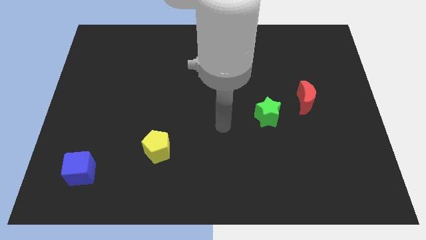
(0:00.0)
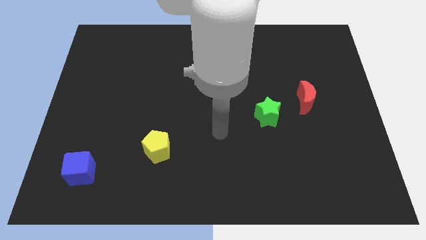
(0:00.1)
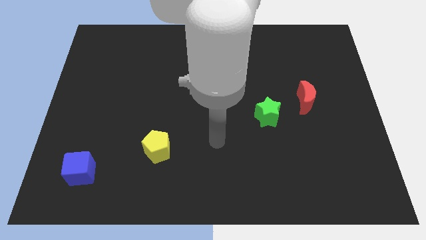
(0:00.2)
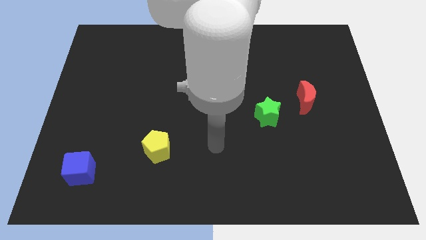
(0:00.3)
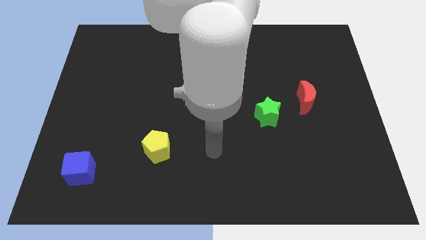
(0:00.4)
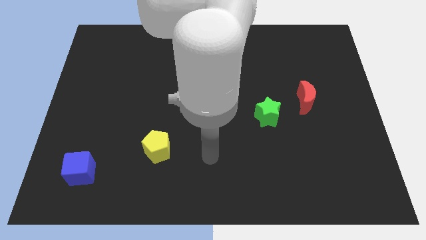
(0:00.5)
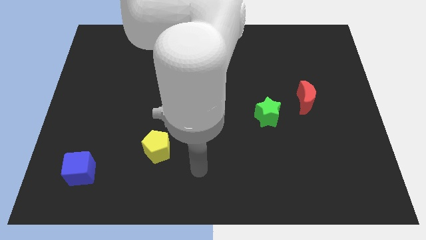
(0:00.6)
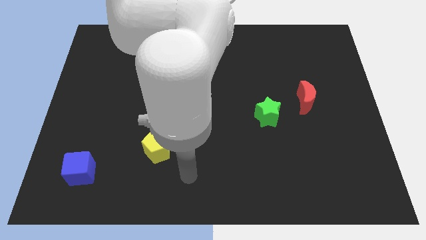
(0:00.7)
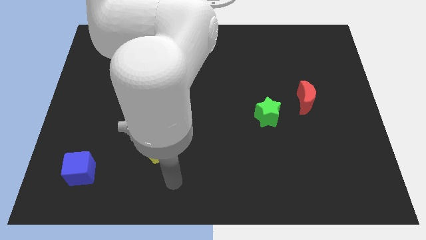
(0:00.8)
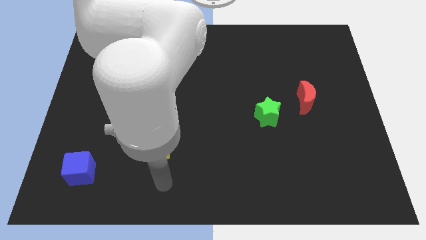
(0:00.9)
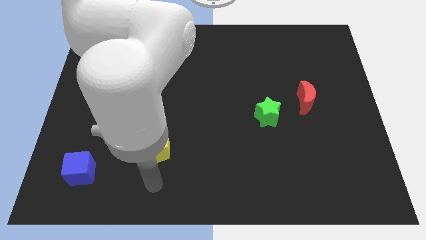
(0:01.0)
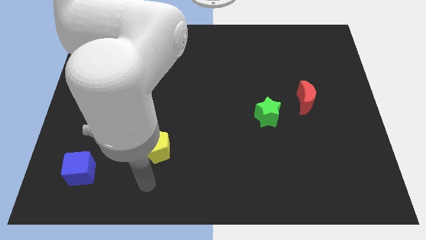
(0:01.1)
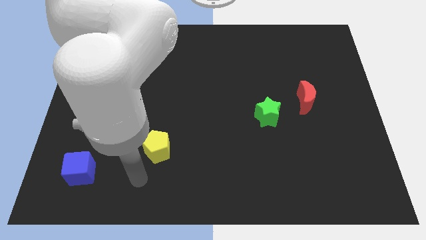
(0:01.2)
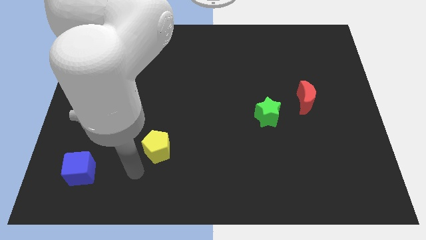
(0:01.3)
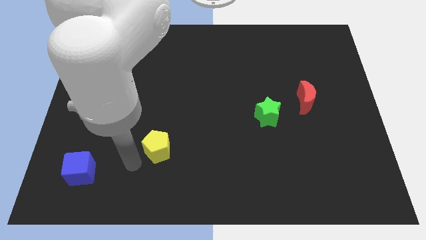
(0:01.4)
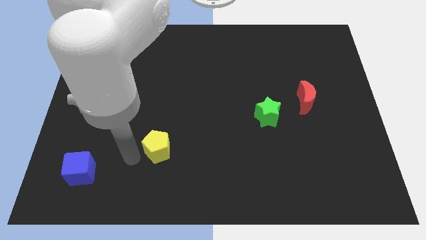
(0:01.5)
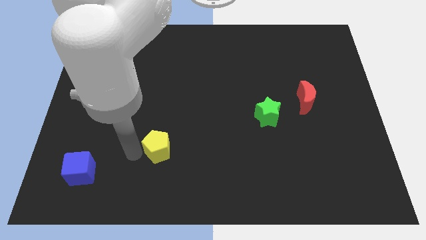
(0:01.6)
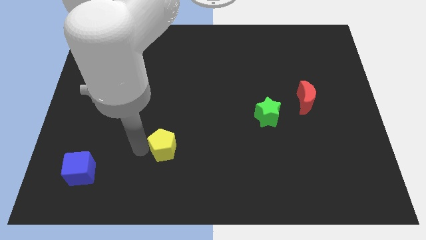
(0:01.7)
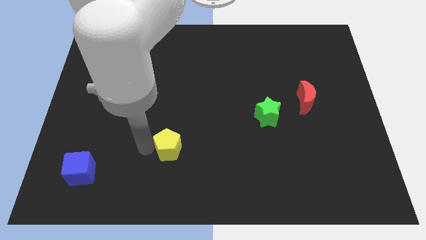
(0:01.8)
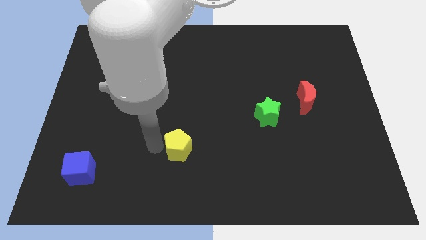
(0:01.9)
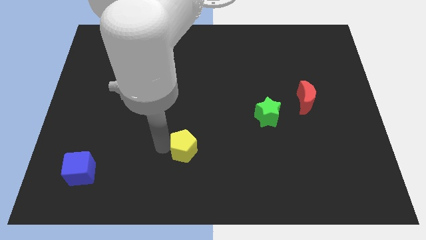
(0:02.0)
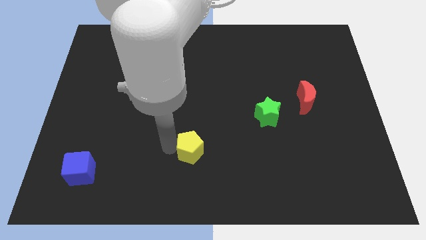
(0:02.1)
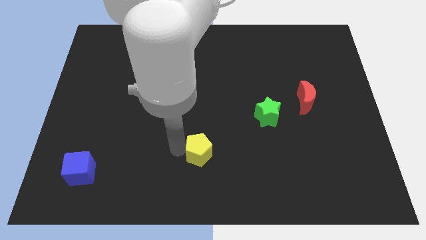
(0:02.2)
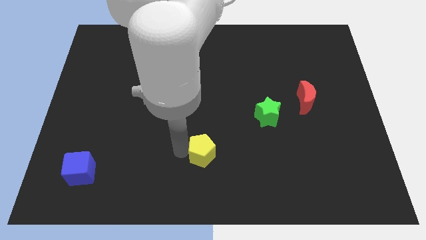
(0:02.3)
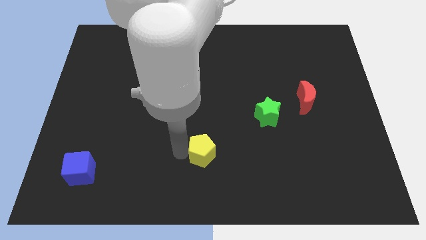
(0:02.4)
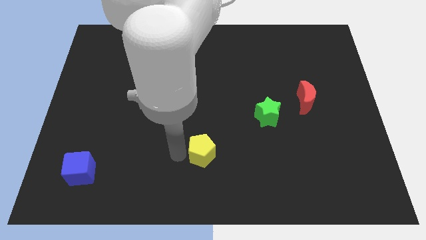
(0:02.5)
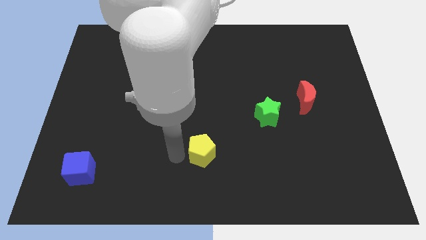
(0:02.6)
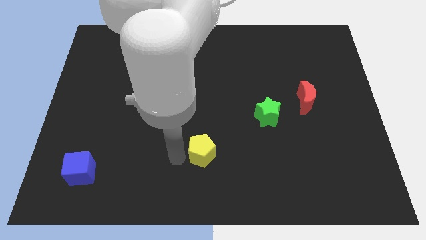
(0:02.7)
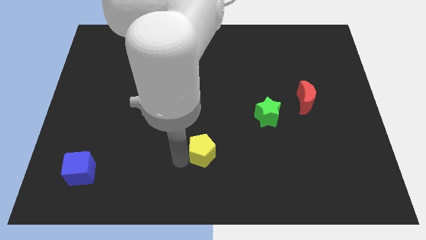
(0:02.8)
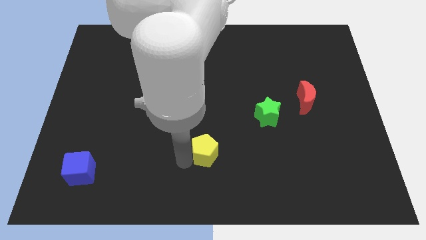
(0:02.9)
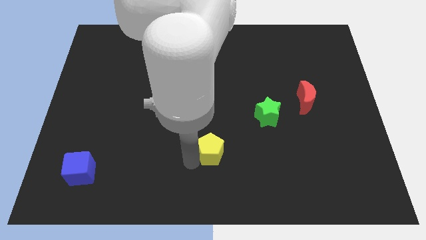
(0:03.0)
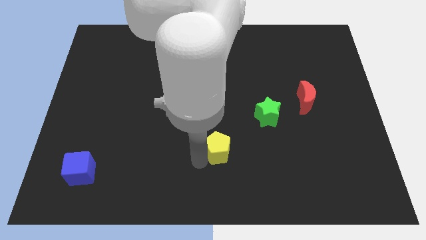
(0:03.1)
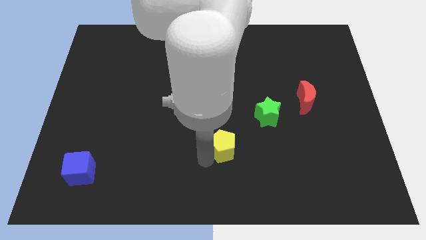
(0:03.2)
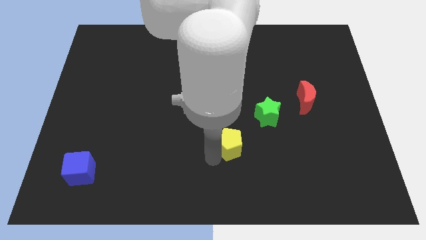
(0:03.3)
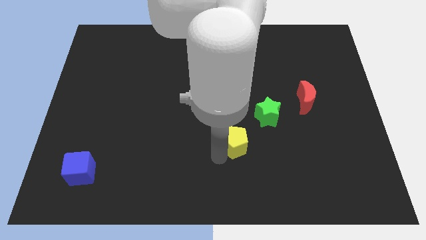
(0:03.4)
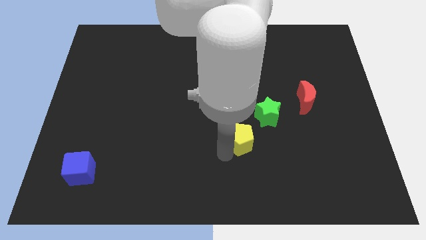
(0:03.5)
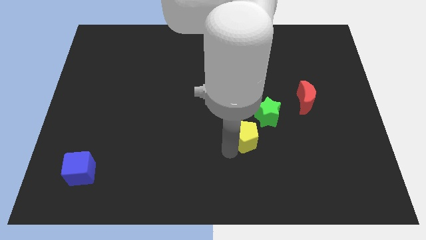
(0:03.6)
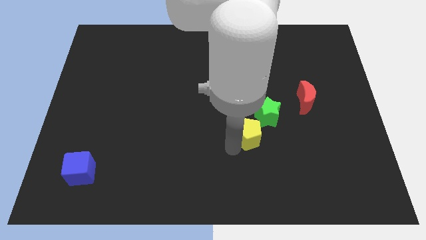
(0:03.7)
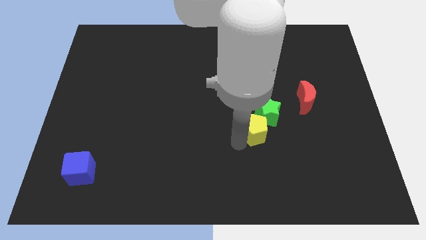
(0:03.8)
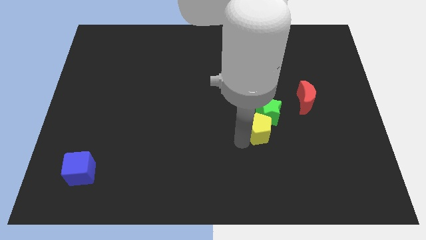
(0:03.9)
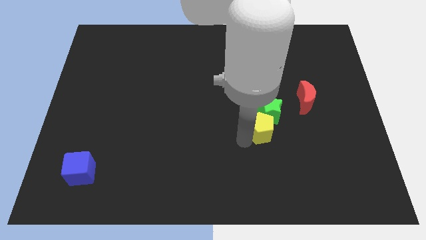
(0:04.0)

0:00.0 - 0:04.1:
slide the yellow block to the green block

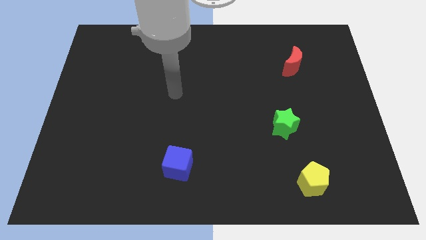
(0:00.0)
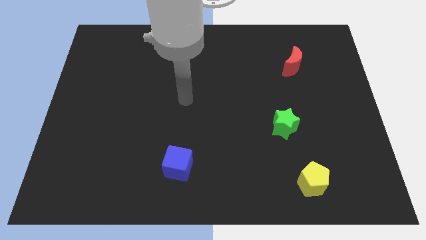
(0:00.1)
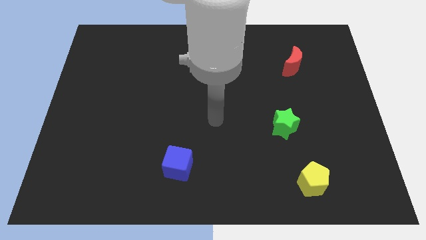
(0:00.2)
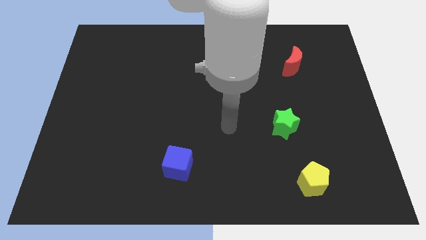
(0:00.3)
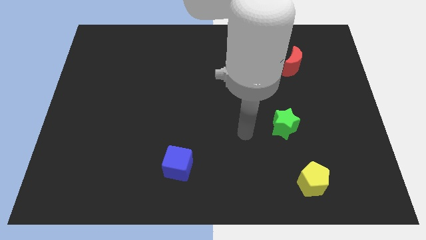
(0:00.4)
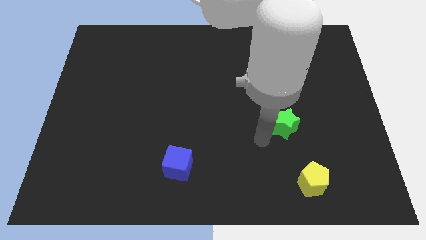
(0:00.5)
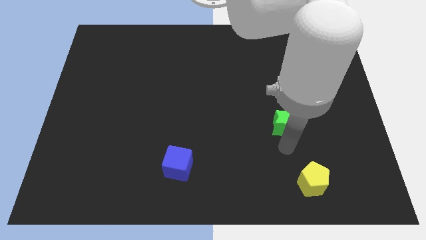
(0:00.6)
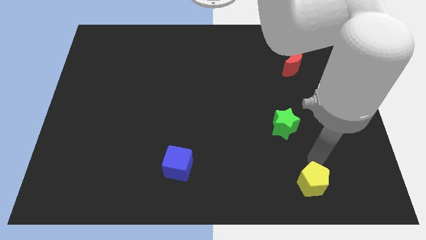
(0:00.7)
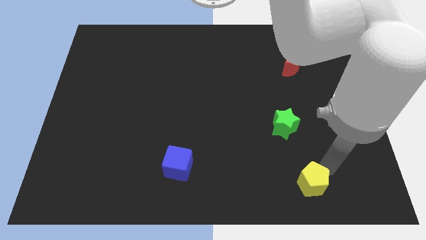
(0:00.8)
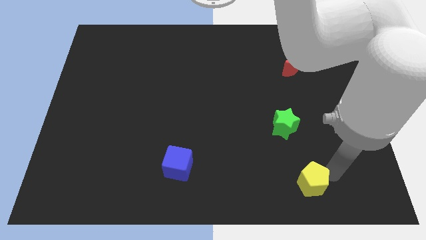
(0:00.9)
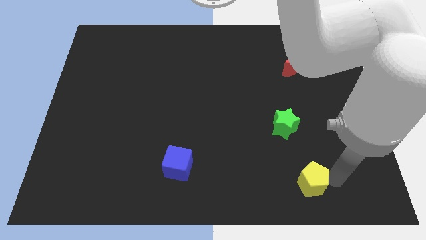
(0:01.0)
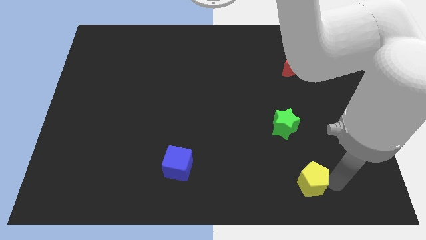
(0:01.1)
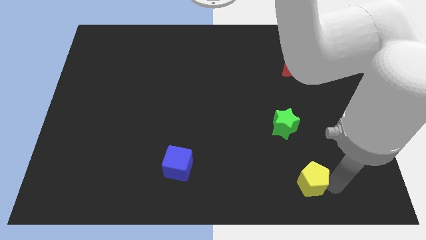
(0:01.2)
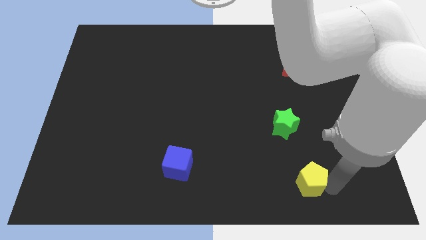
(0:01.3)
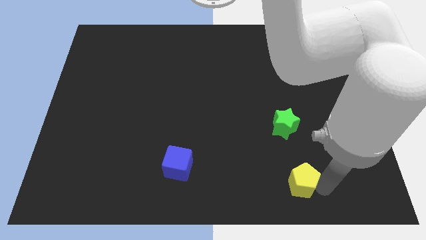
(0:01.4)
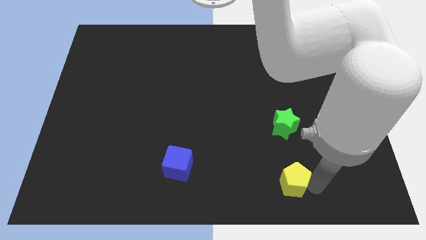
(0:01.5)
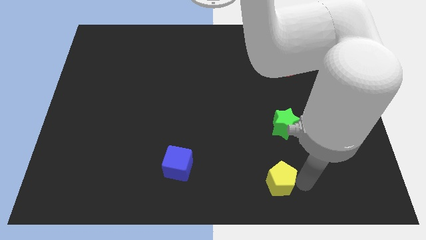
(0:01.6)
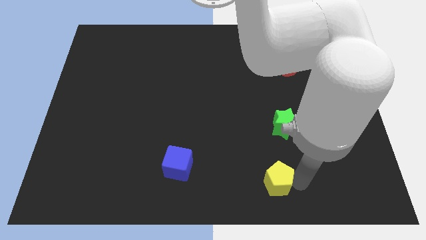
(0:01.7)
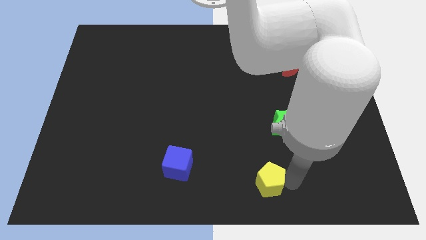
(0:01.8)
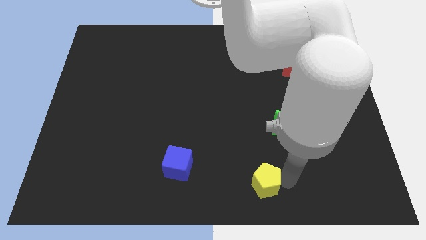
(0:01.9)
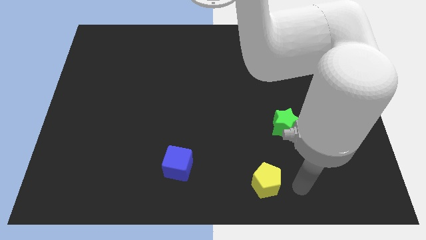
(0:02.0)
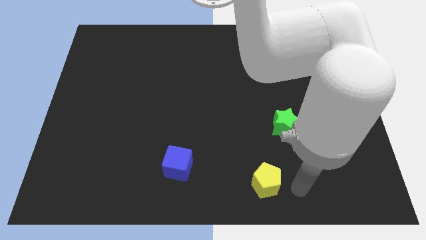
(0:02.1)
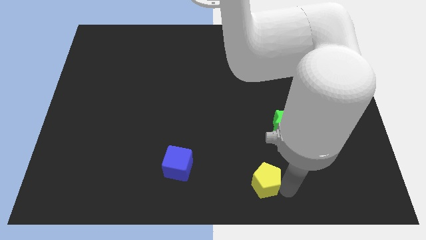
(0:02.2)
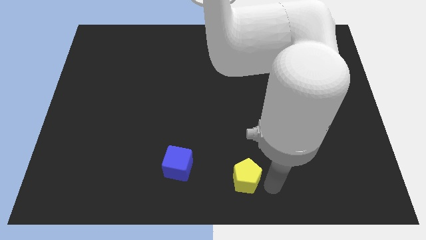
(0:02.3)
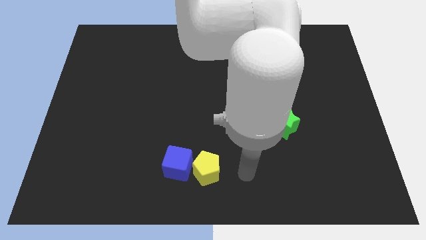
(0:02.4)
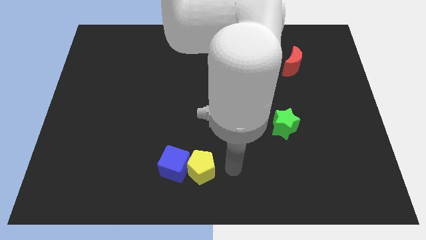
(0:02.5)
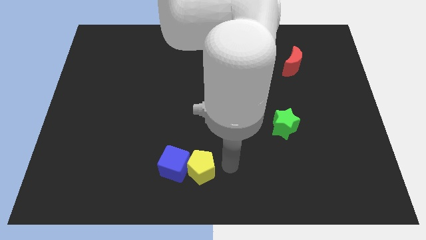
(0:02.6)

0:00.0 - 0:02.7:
move the yellow pentagon close to the cube

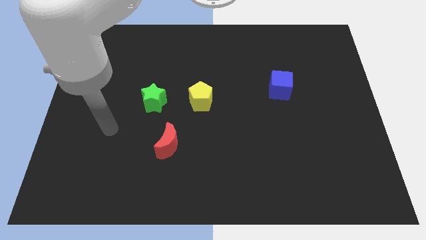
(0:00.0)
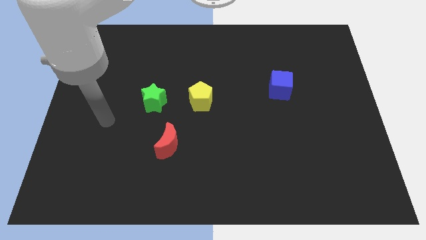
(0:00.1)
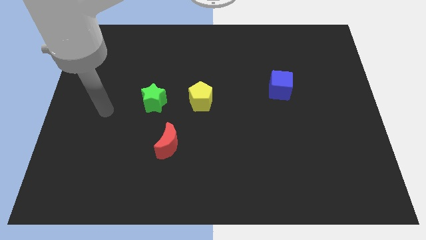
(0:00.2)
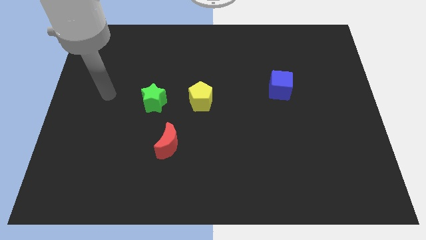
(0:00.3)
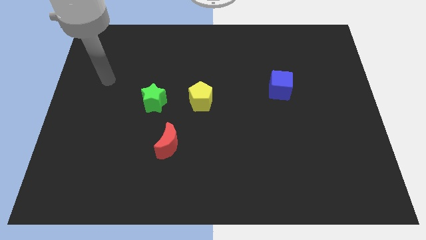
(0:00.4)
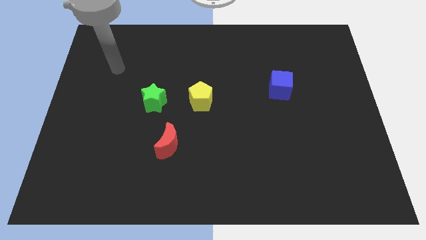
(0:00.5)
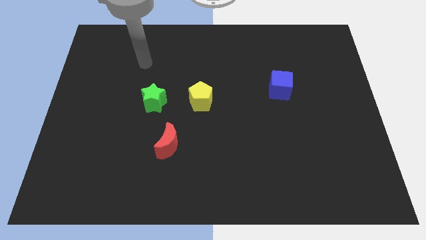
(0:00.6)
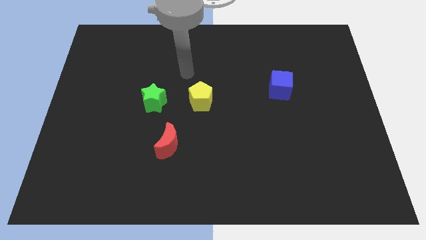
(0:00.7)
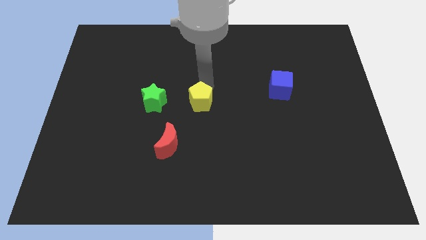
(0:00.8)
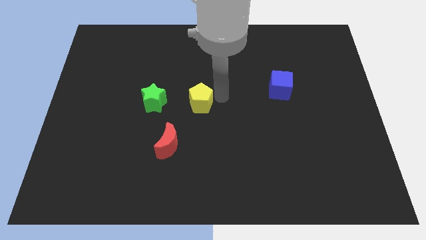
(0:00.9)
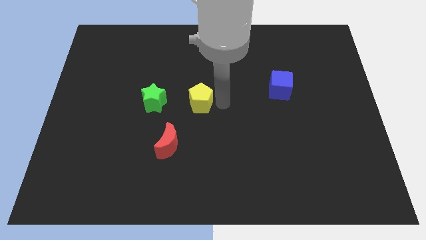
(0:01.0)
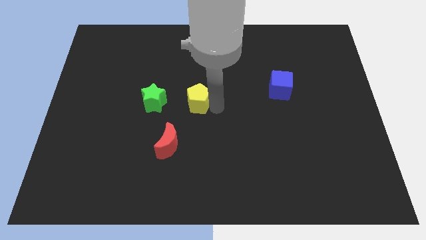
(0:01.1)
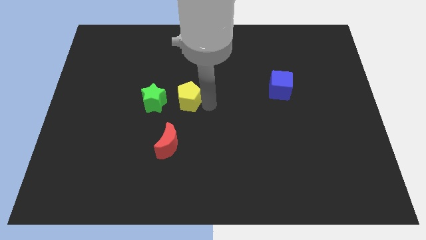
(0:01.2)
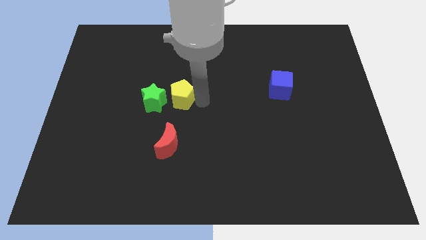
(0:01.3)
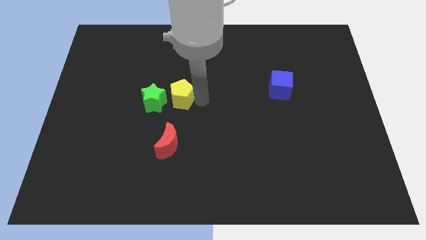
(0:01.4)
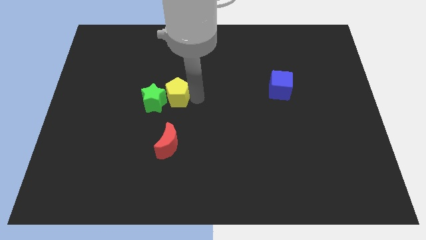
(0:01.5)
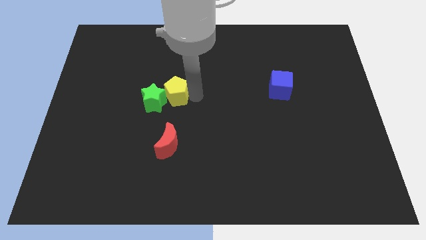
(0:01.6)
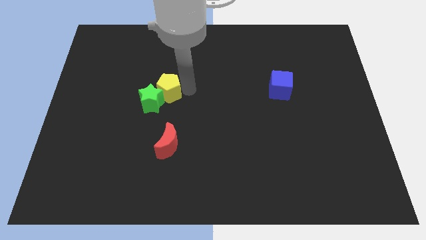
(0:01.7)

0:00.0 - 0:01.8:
slide the yellow pentagon close to the green block
